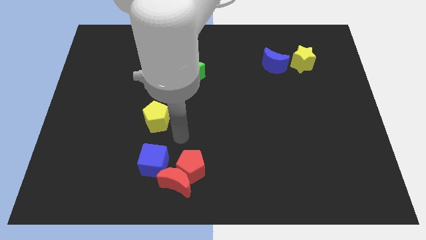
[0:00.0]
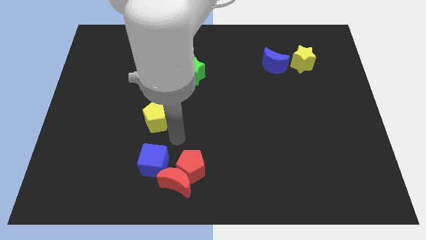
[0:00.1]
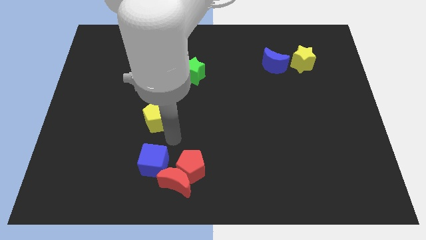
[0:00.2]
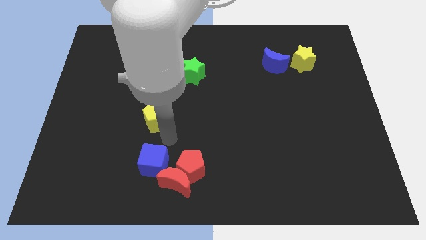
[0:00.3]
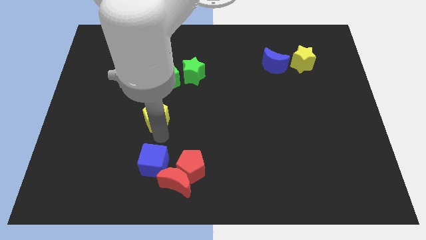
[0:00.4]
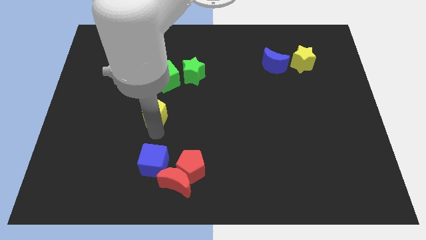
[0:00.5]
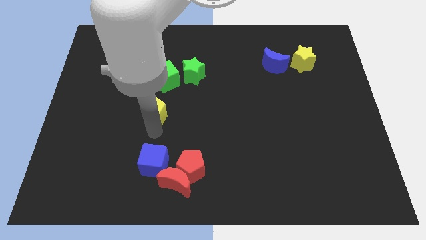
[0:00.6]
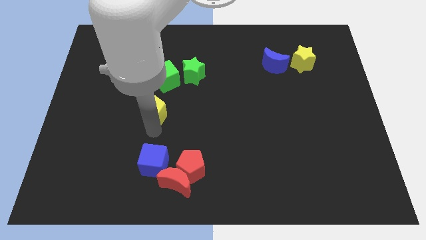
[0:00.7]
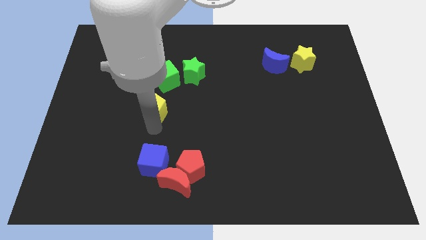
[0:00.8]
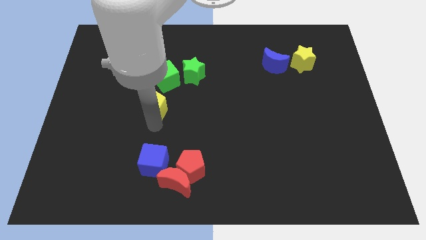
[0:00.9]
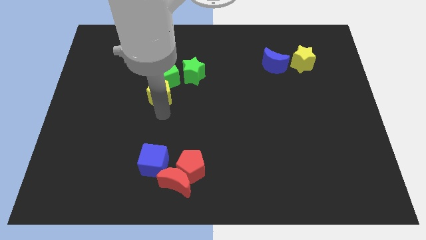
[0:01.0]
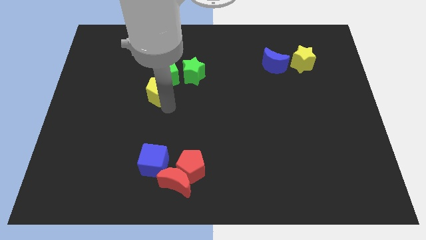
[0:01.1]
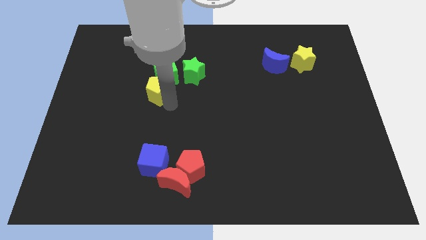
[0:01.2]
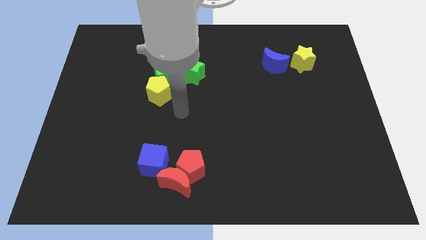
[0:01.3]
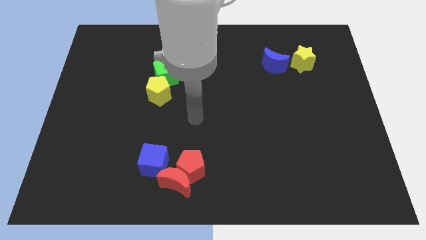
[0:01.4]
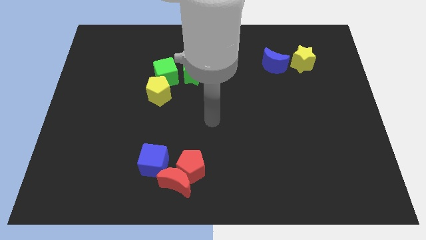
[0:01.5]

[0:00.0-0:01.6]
push the yellow pentagon into green cube

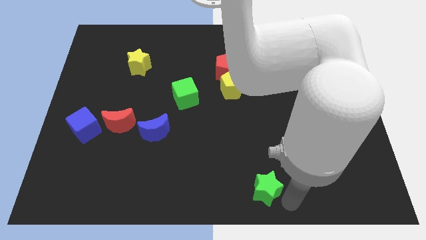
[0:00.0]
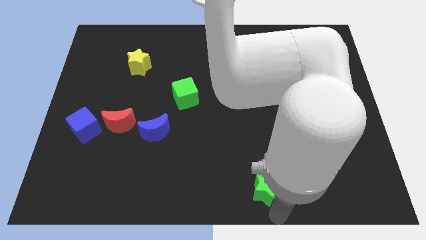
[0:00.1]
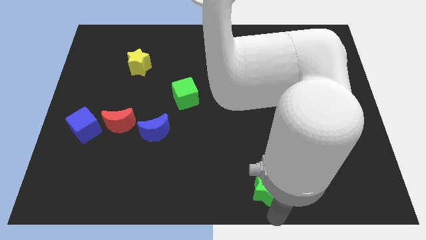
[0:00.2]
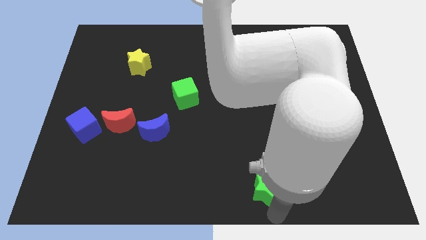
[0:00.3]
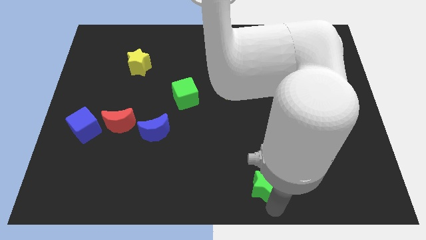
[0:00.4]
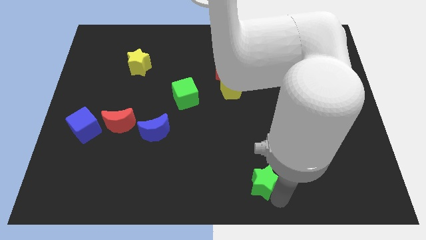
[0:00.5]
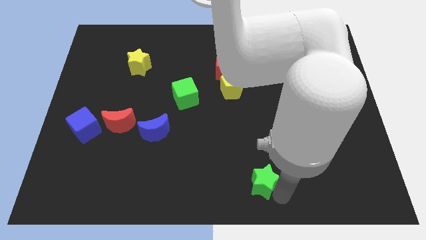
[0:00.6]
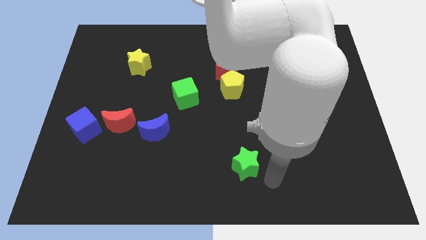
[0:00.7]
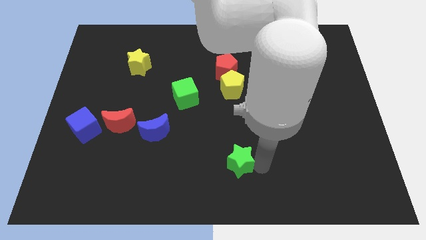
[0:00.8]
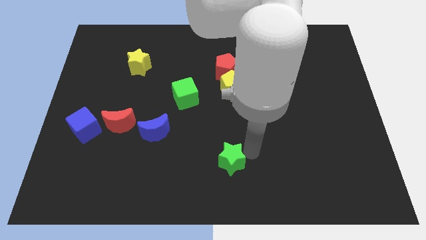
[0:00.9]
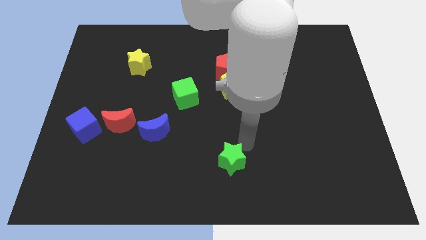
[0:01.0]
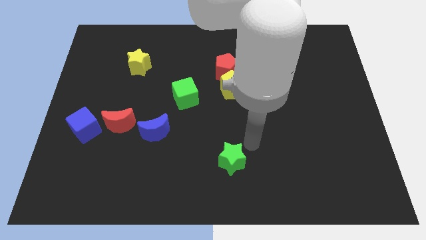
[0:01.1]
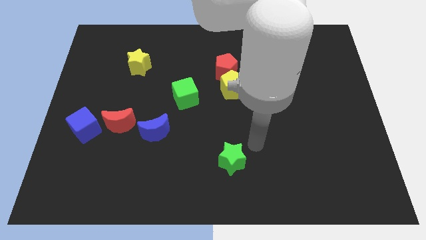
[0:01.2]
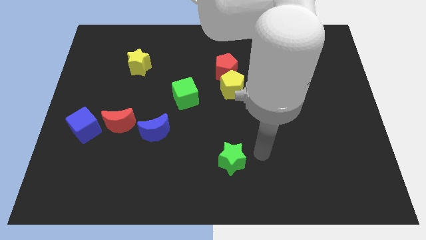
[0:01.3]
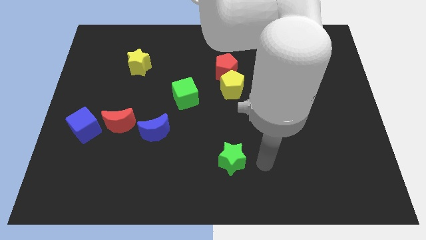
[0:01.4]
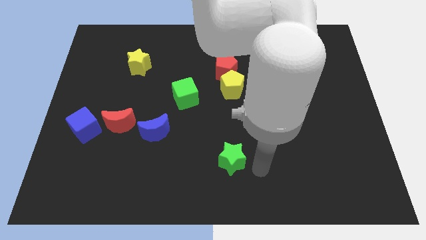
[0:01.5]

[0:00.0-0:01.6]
place the green star diagonally to green cube

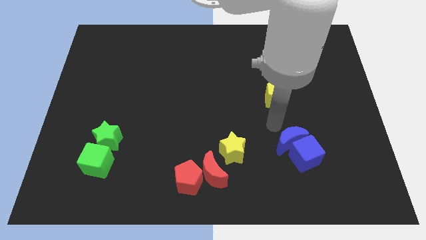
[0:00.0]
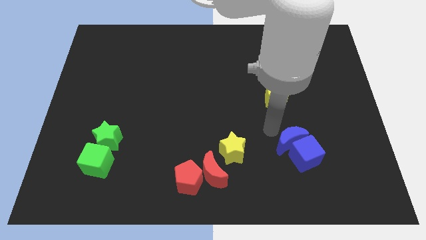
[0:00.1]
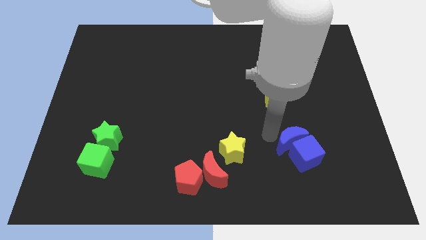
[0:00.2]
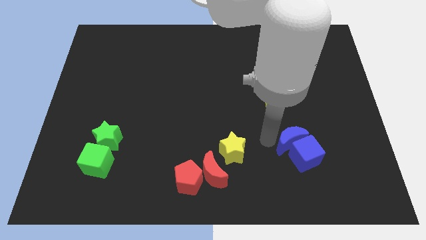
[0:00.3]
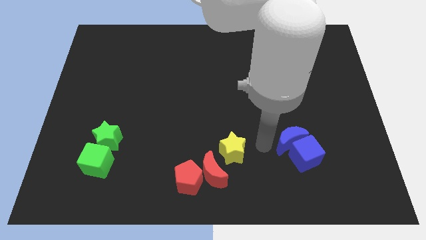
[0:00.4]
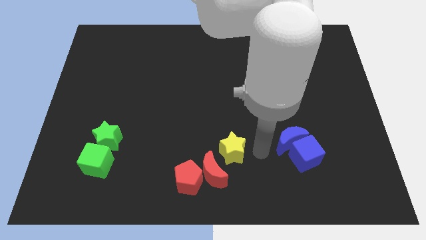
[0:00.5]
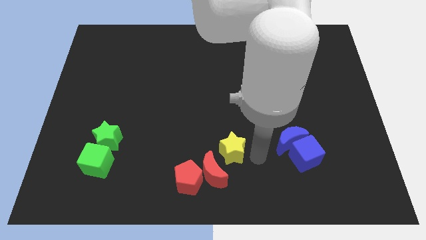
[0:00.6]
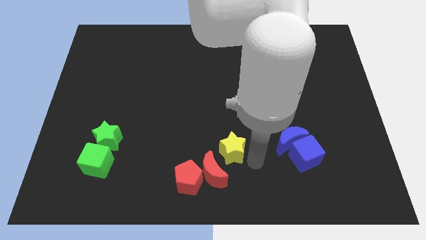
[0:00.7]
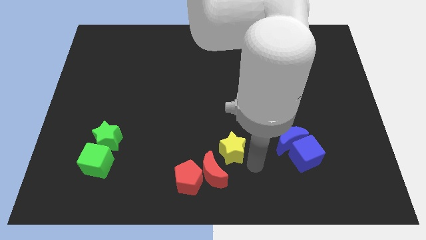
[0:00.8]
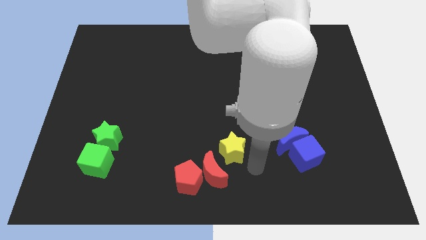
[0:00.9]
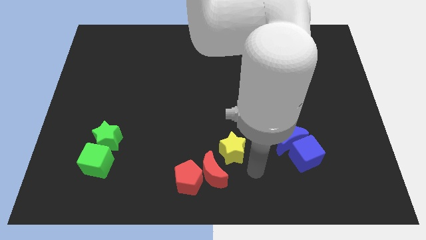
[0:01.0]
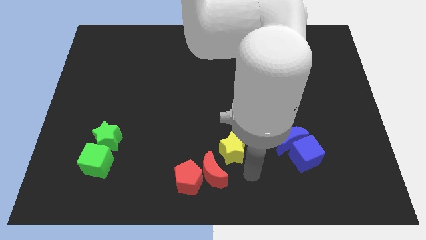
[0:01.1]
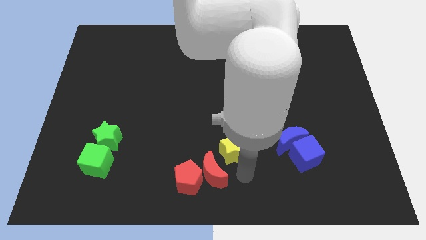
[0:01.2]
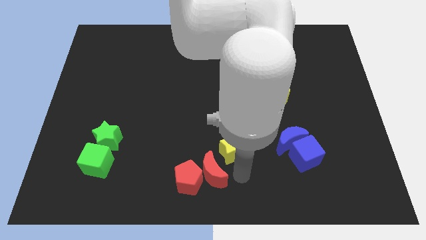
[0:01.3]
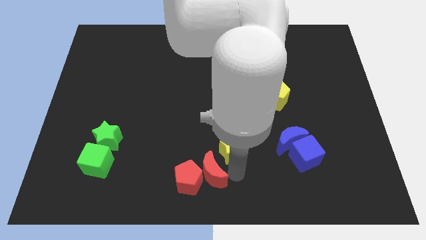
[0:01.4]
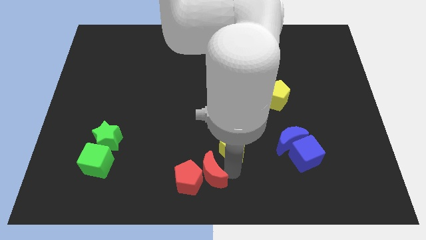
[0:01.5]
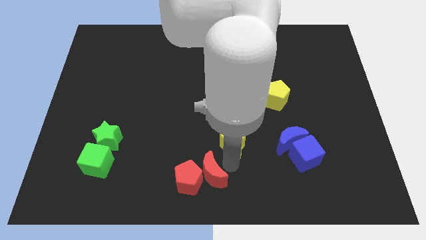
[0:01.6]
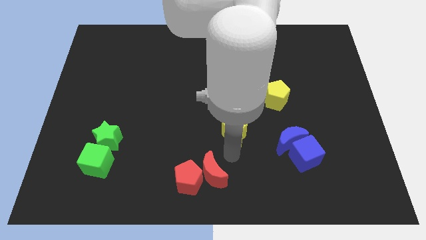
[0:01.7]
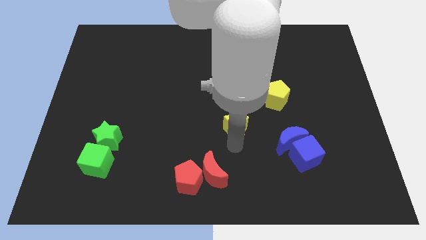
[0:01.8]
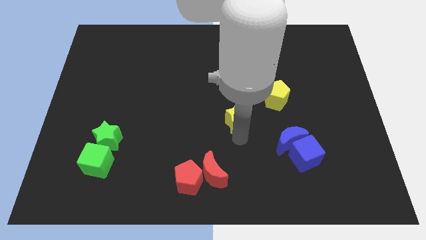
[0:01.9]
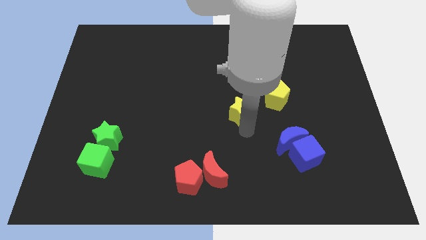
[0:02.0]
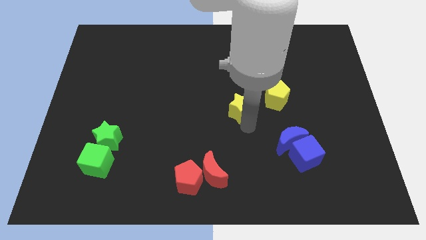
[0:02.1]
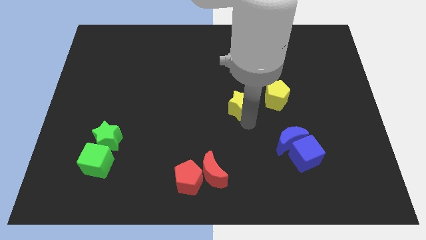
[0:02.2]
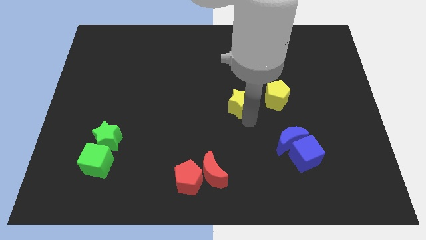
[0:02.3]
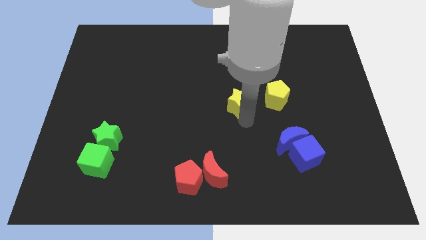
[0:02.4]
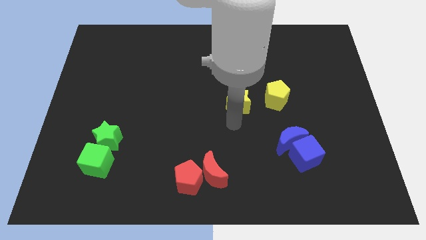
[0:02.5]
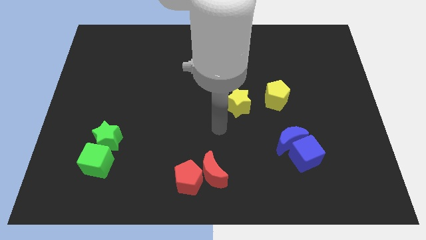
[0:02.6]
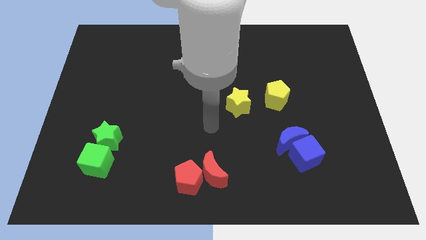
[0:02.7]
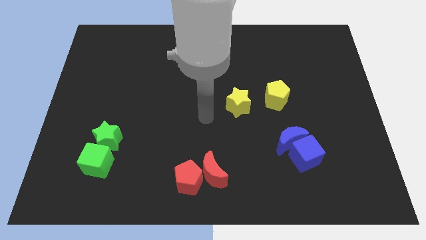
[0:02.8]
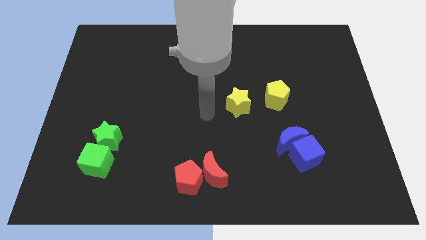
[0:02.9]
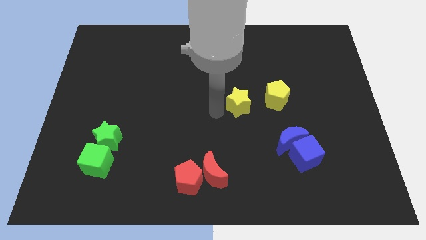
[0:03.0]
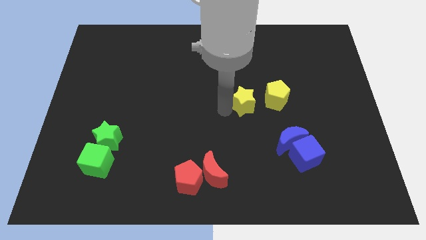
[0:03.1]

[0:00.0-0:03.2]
place the yellow star to the left of the yellow pentagon

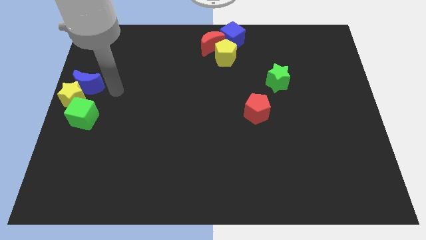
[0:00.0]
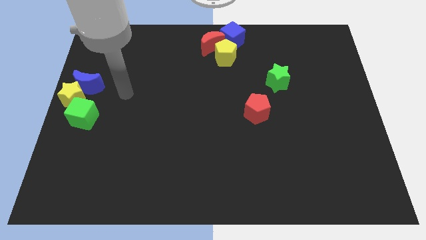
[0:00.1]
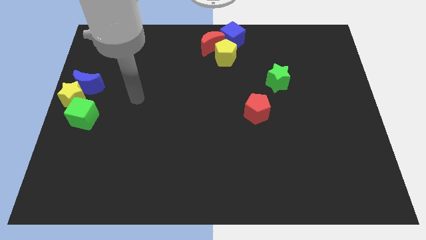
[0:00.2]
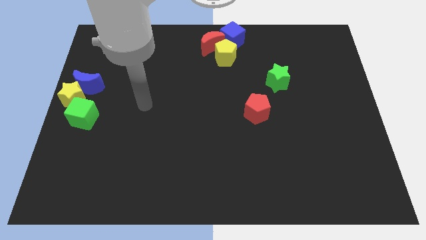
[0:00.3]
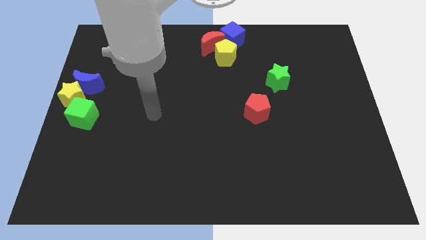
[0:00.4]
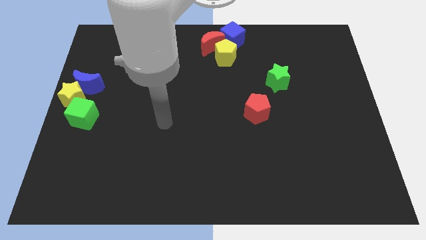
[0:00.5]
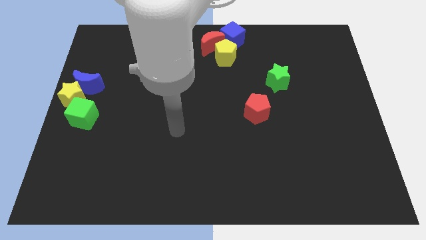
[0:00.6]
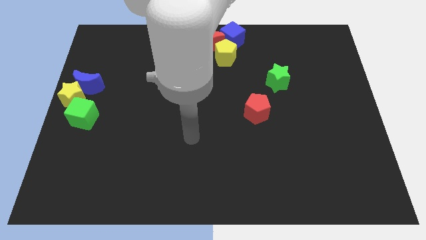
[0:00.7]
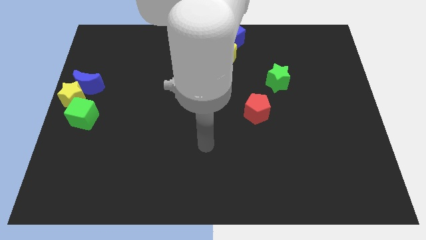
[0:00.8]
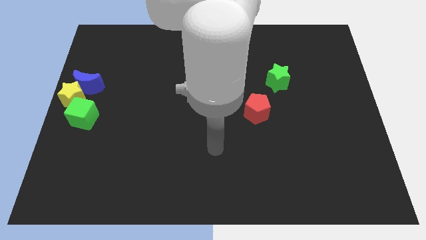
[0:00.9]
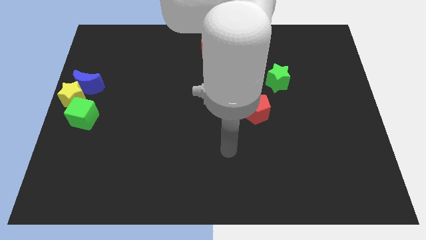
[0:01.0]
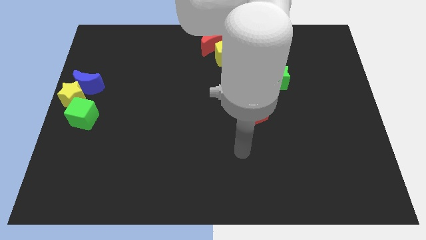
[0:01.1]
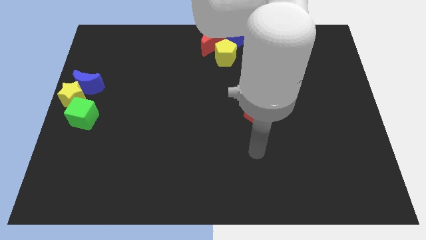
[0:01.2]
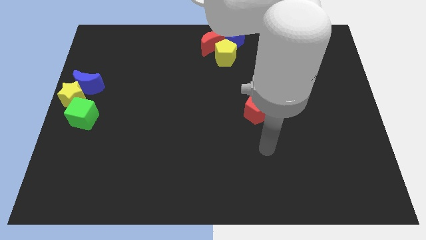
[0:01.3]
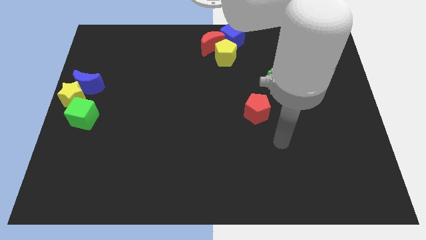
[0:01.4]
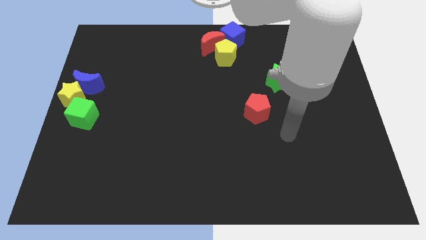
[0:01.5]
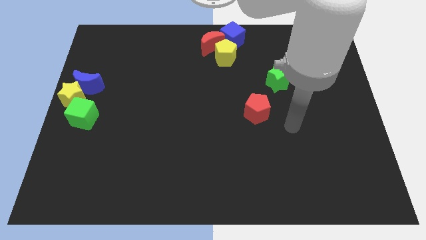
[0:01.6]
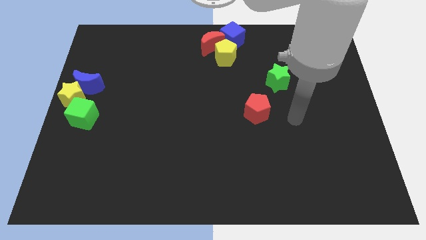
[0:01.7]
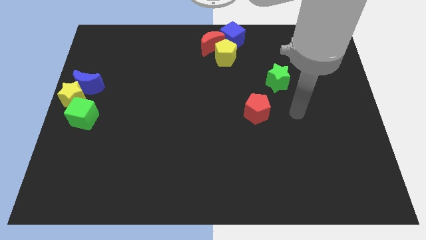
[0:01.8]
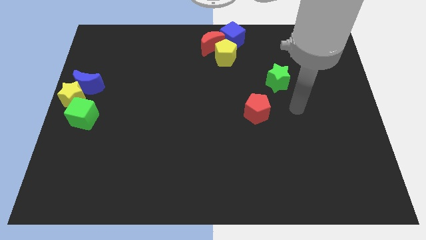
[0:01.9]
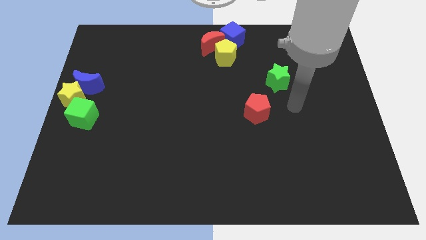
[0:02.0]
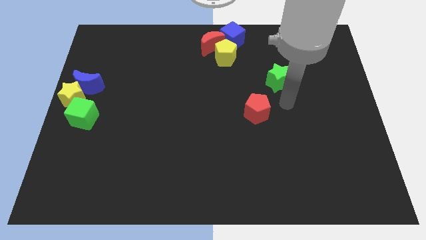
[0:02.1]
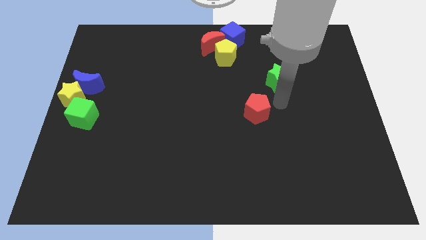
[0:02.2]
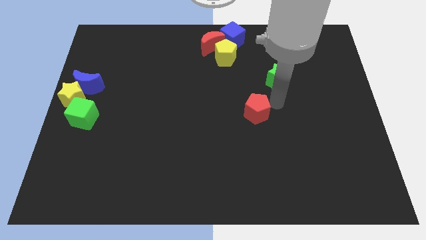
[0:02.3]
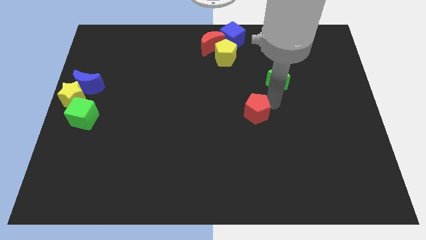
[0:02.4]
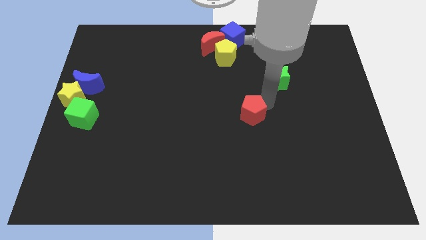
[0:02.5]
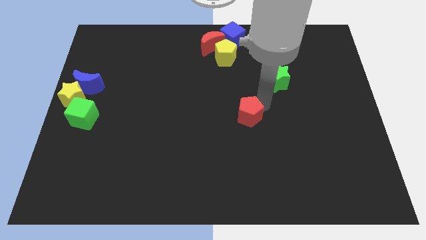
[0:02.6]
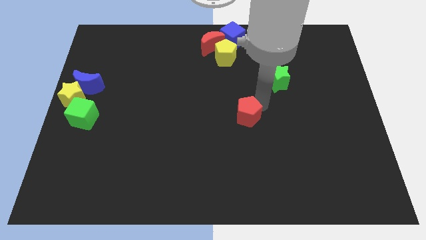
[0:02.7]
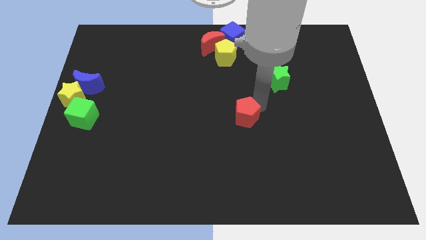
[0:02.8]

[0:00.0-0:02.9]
push the red pentagon slightly downwards
